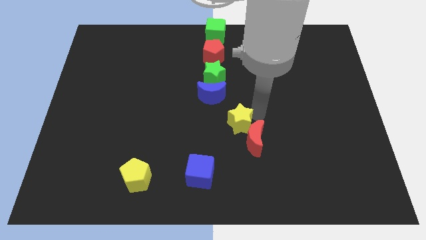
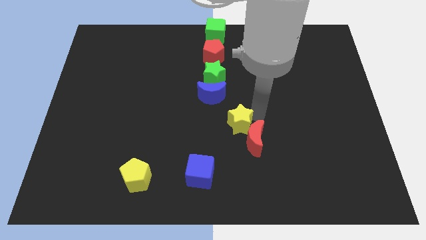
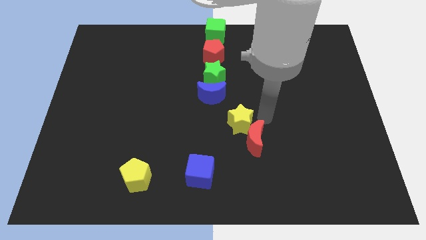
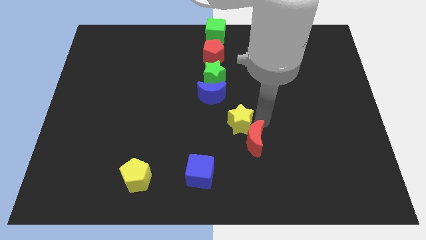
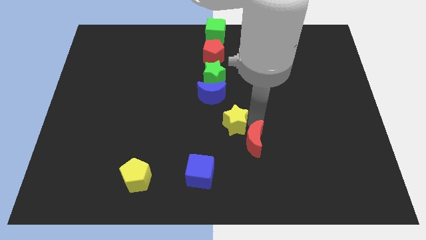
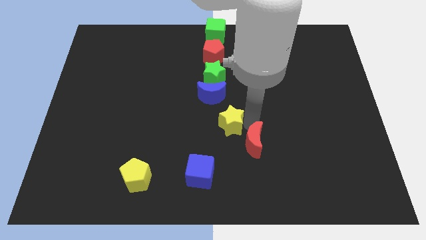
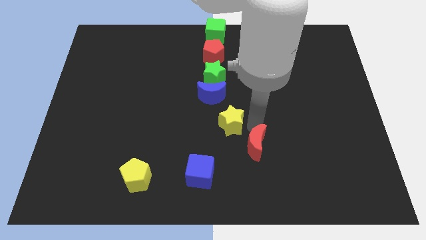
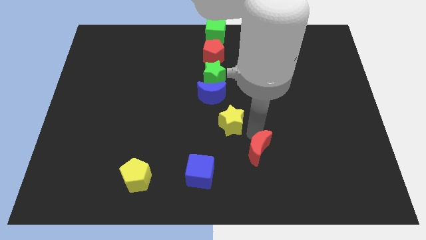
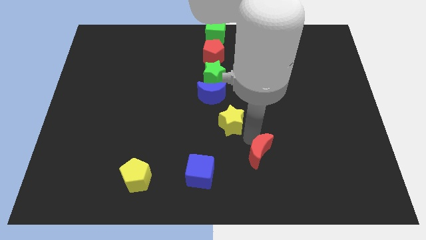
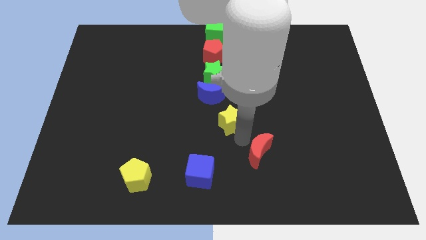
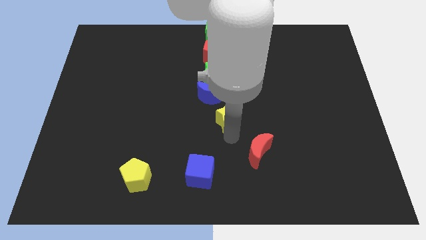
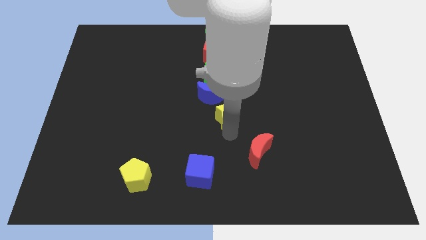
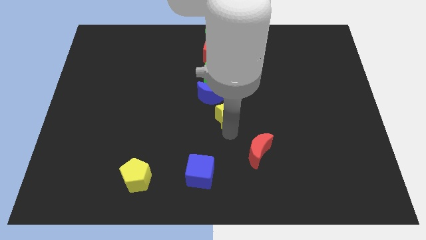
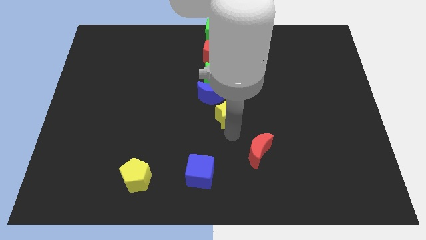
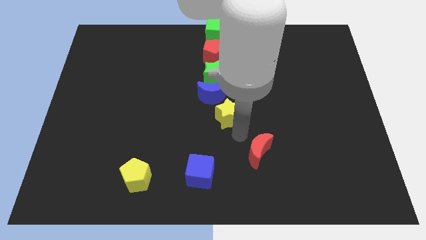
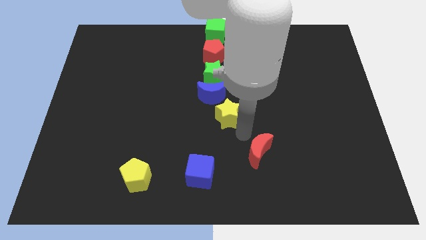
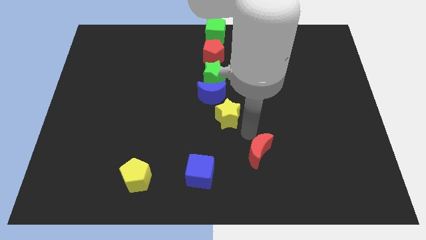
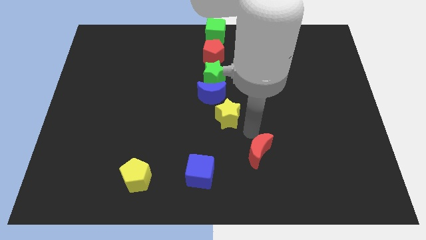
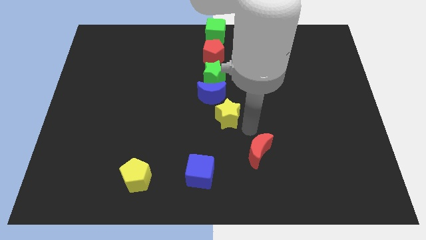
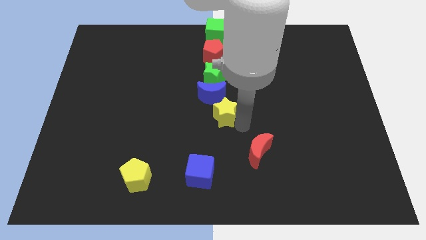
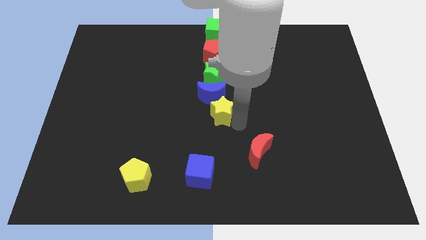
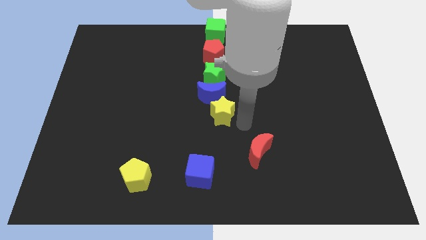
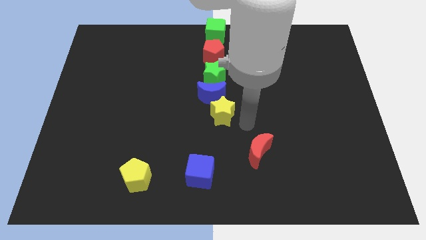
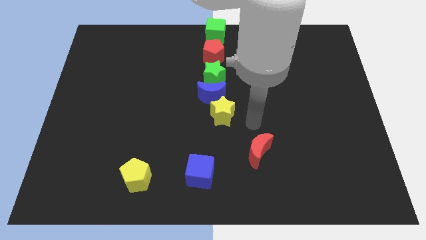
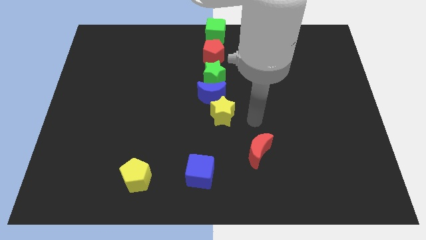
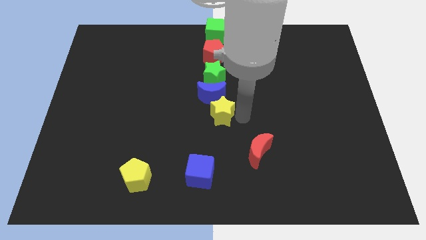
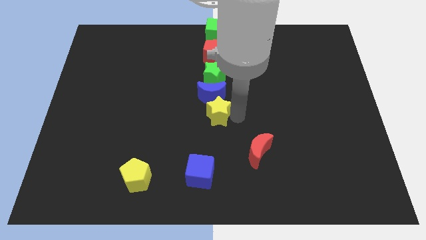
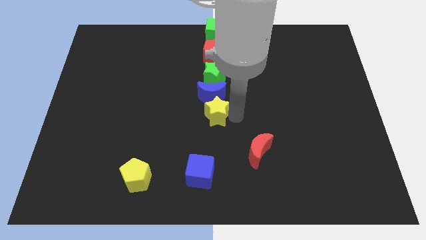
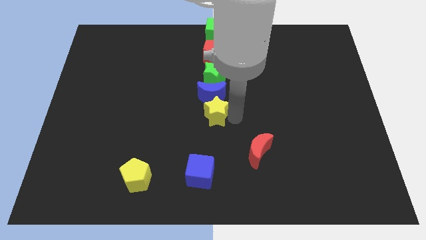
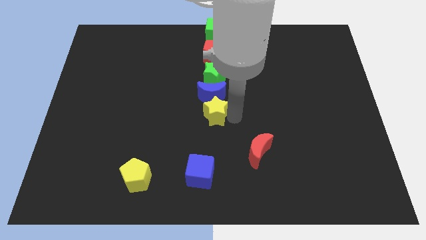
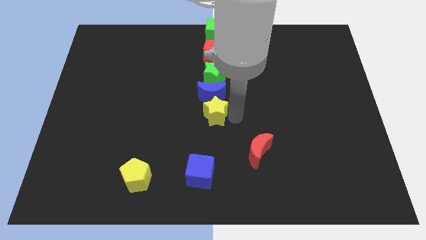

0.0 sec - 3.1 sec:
separate the red moon and put the yellow star below the blue crescent

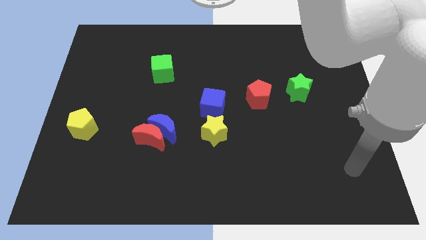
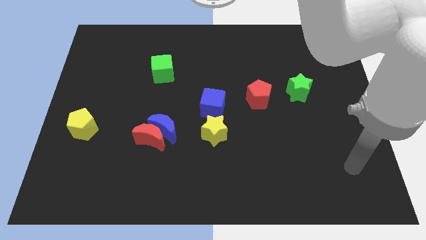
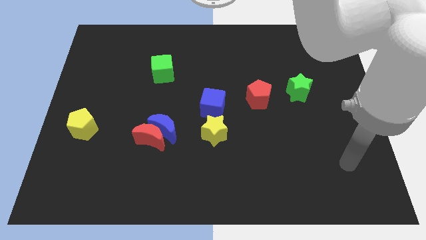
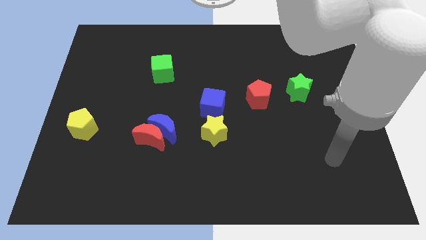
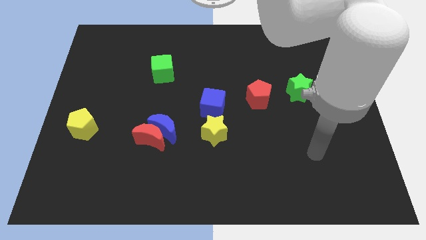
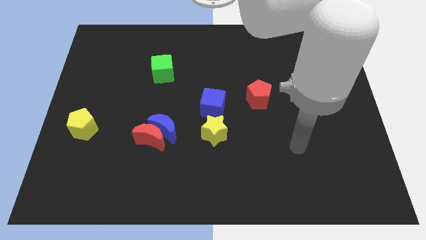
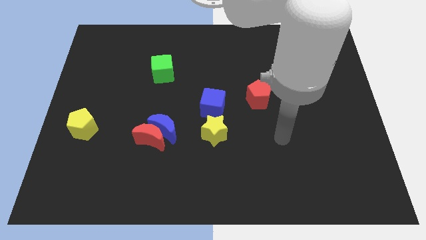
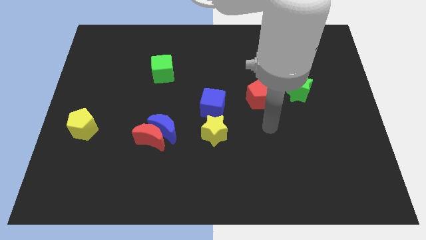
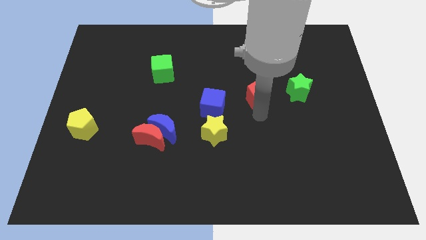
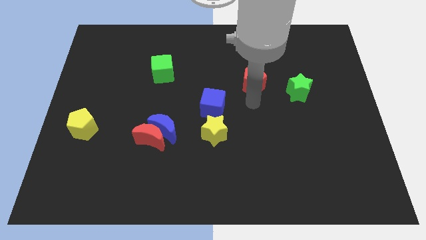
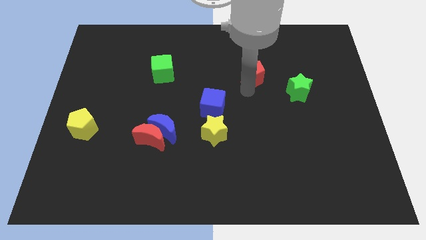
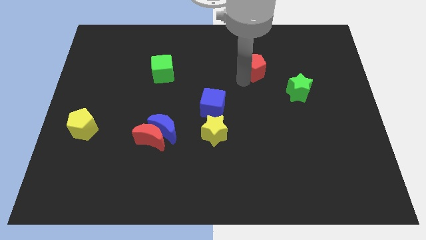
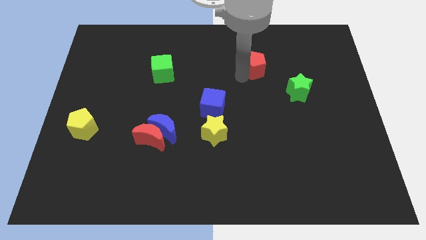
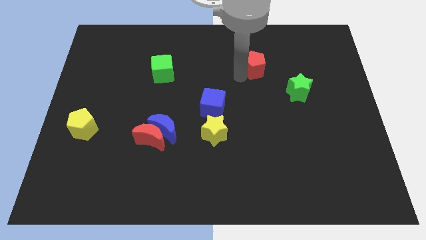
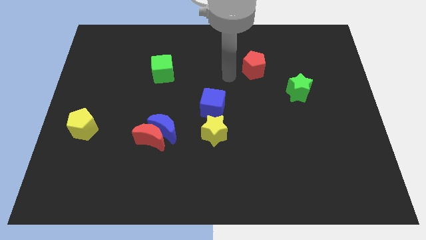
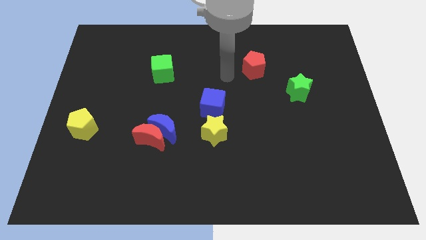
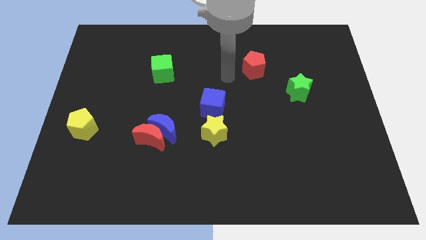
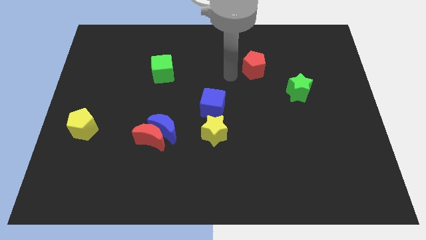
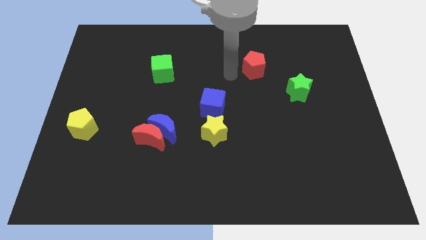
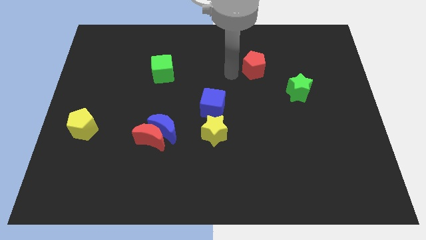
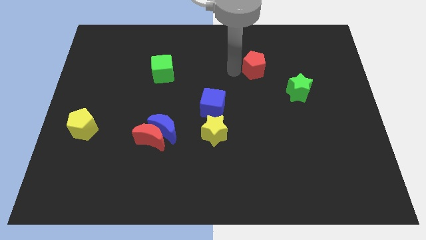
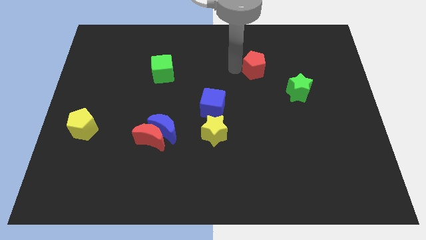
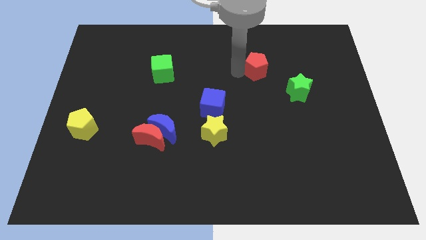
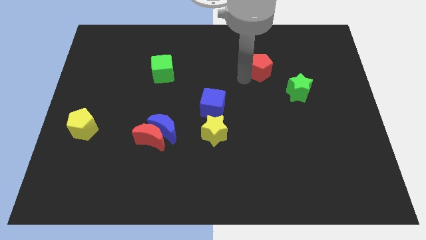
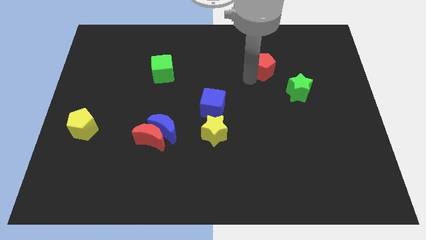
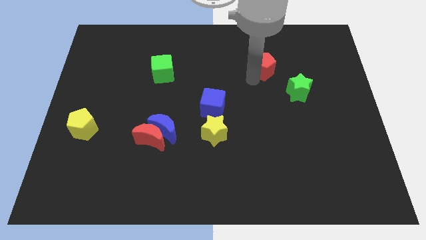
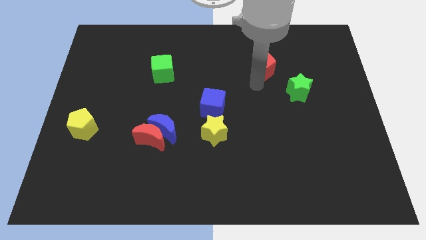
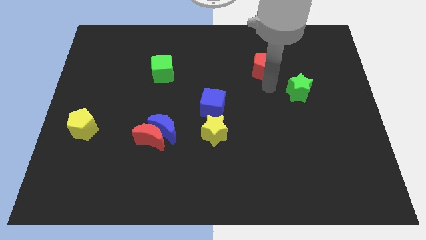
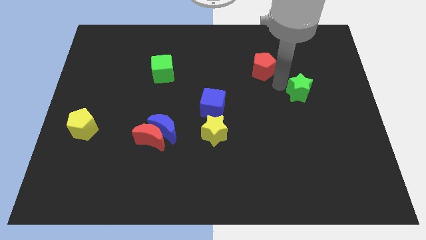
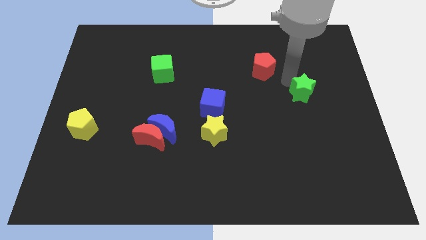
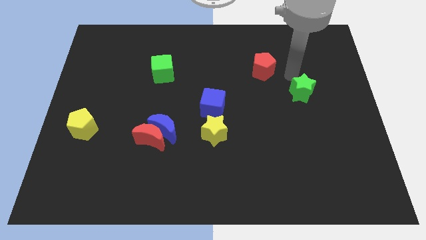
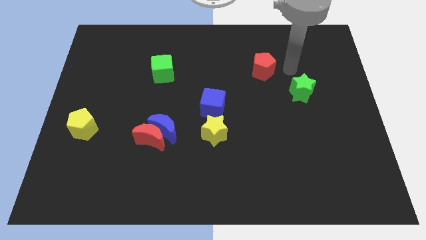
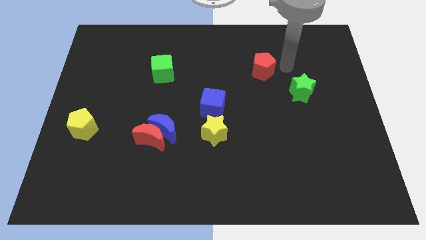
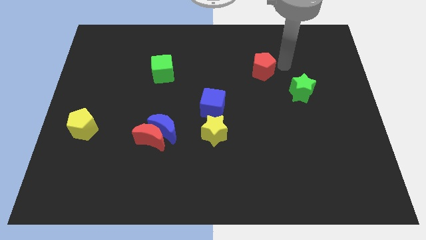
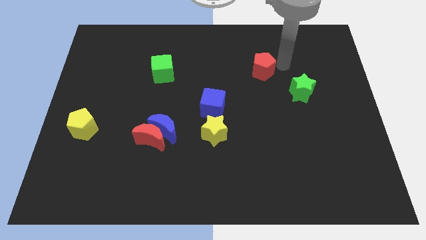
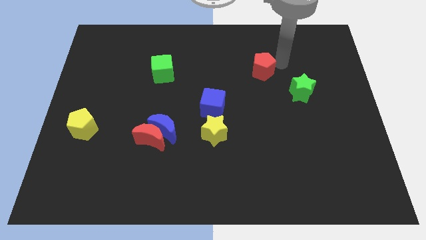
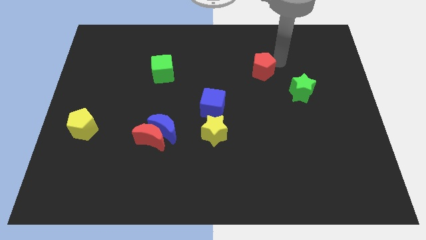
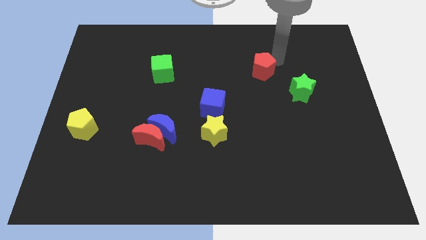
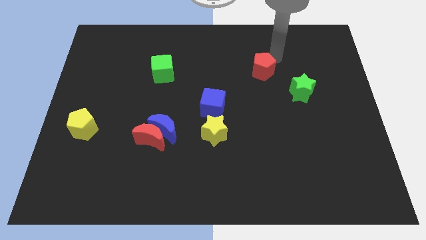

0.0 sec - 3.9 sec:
move the red pentagon slightly to the top

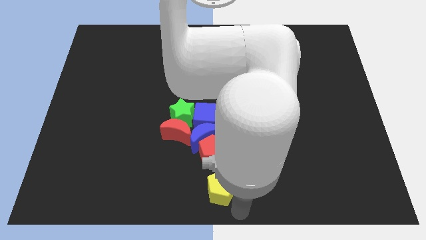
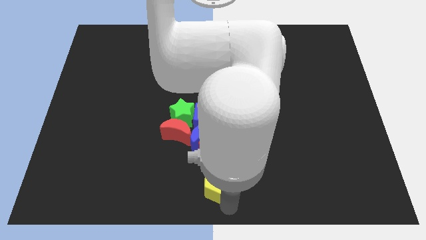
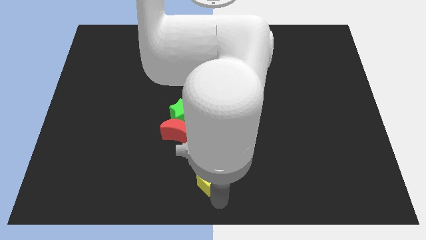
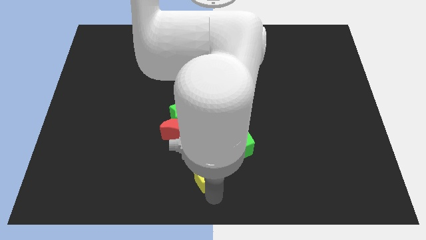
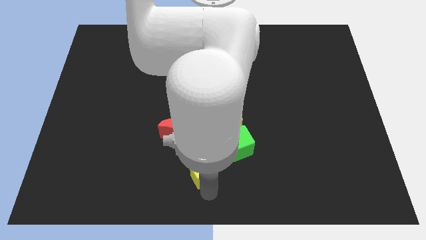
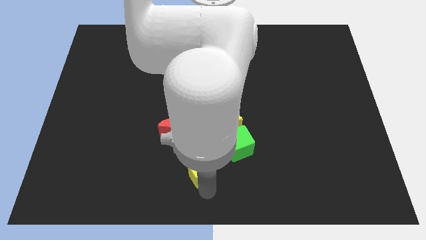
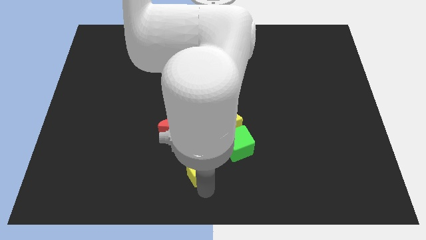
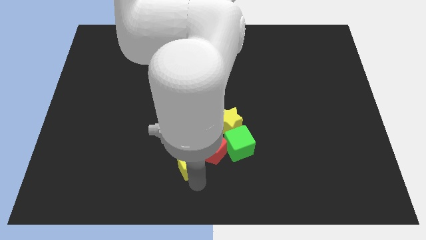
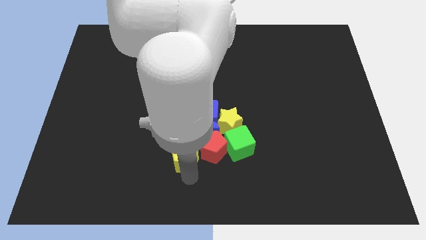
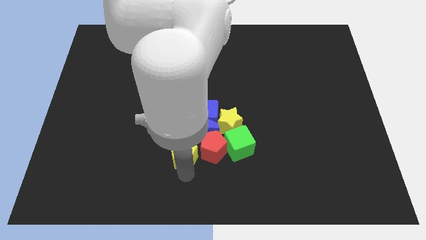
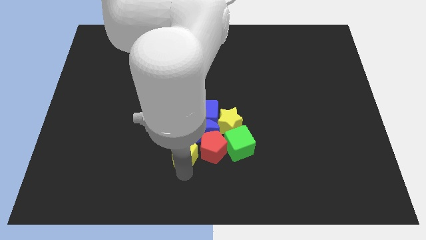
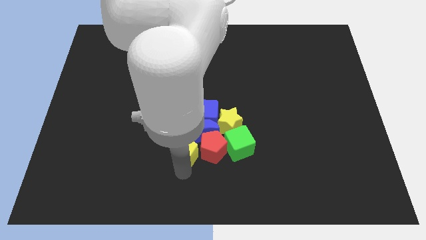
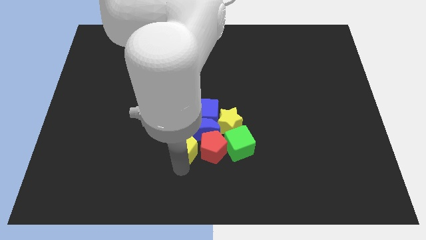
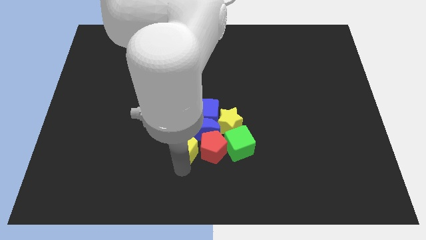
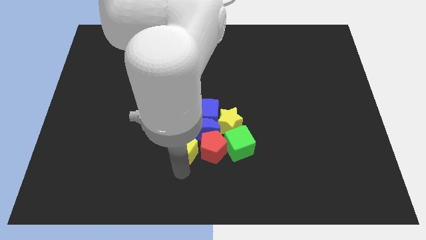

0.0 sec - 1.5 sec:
move the yellow pentagon left to red pentagon

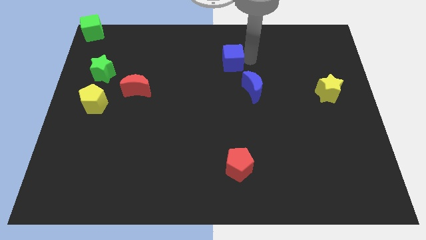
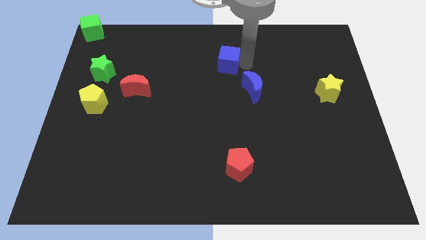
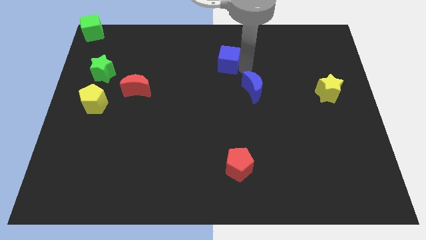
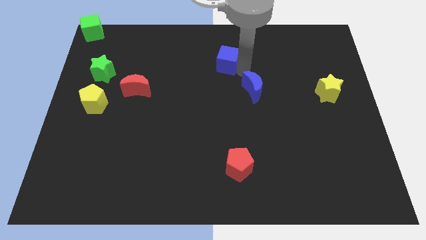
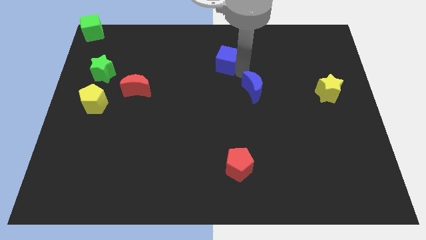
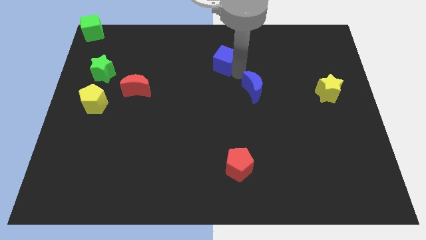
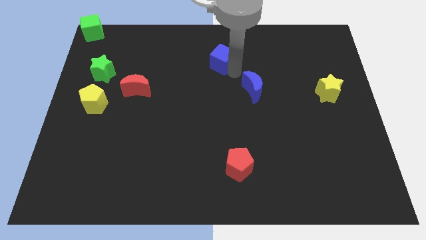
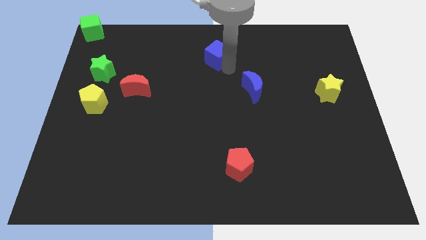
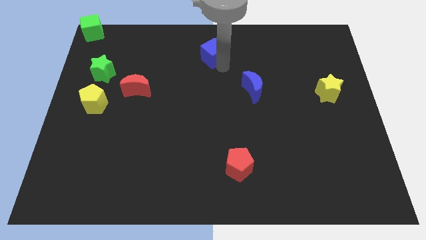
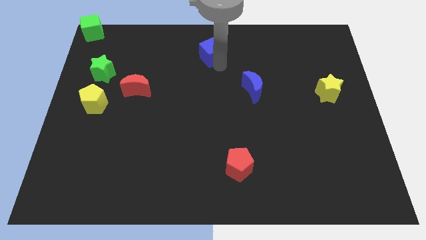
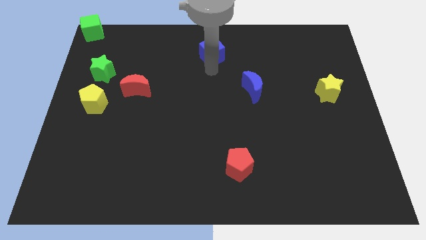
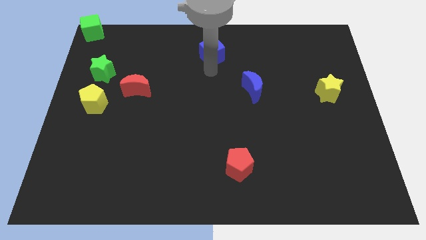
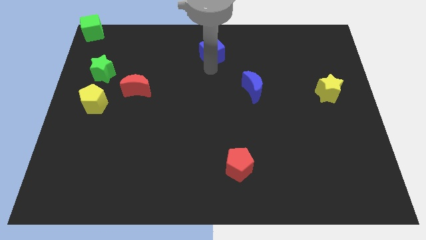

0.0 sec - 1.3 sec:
place the blue cube parallel to the top center of the board
